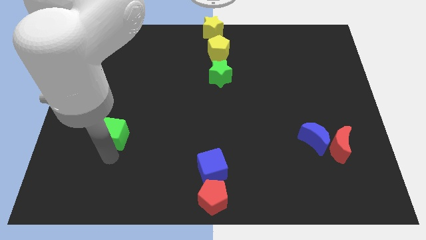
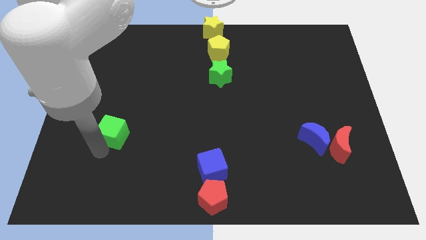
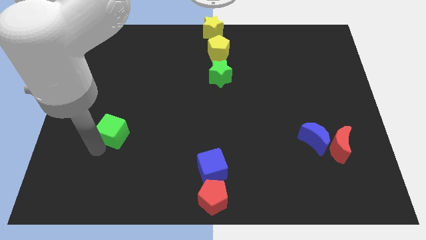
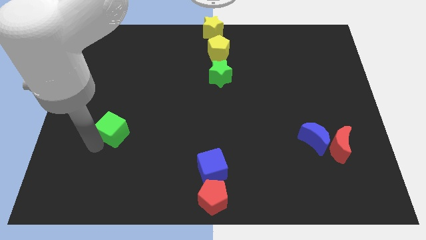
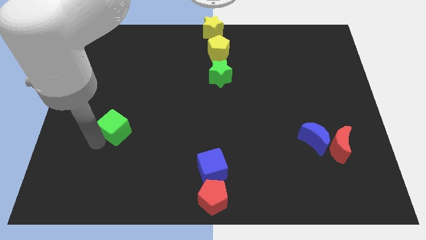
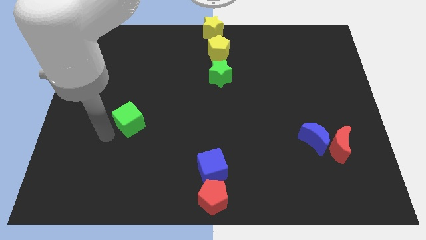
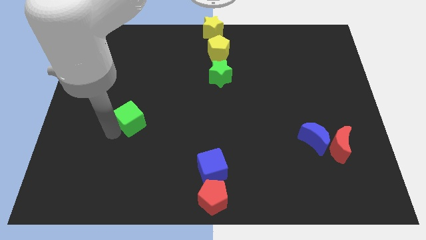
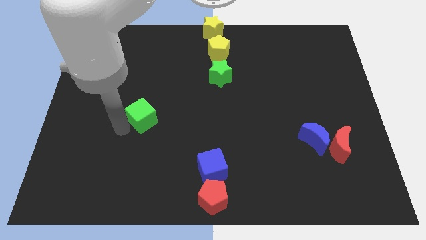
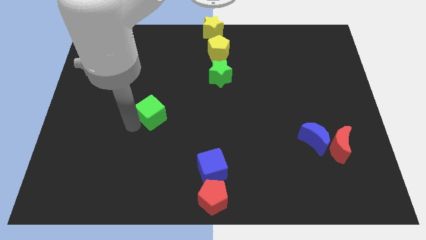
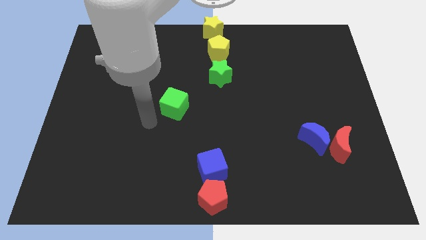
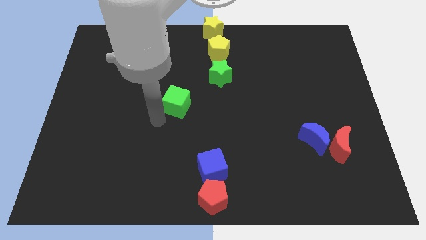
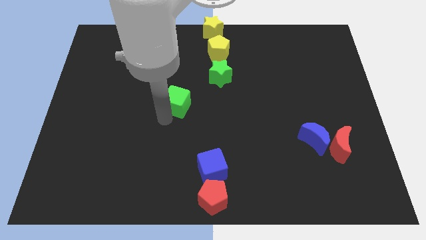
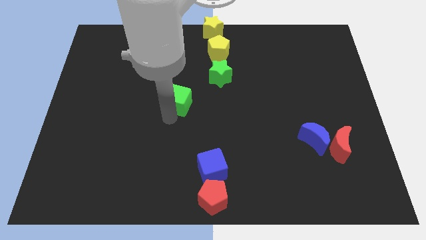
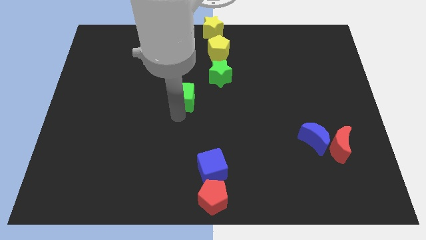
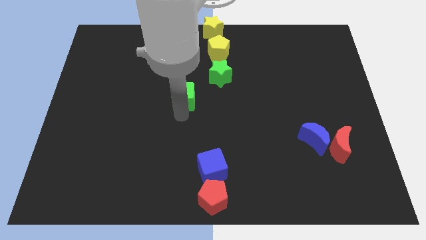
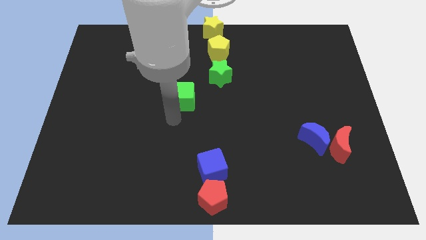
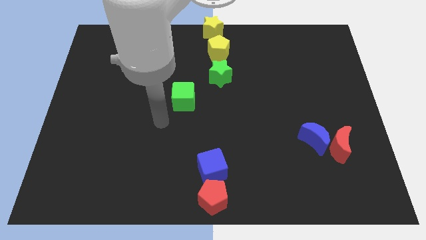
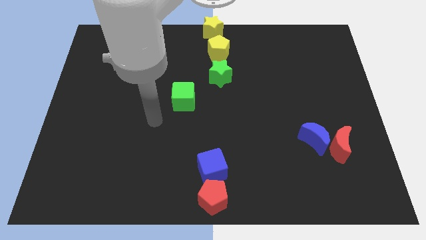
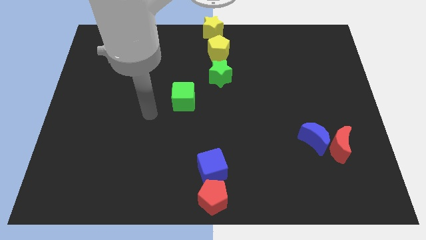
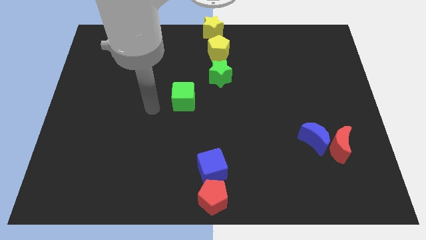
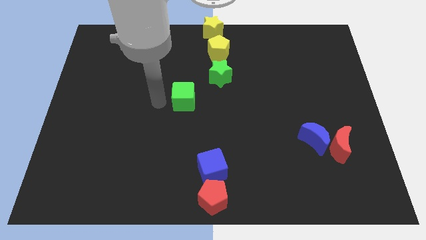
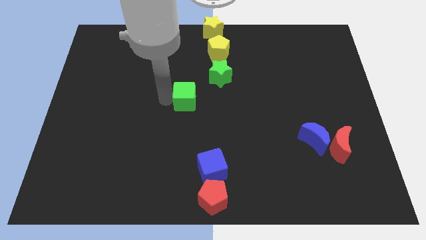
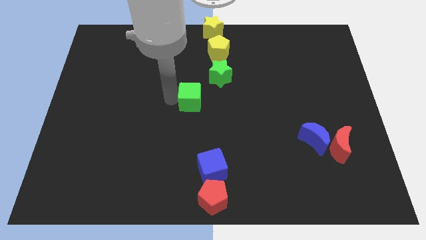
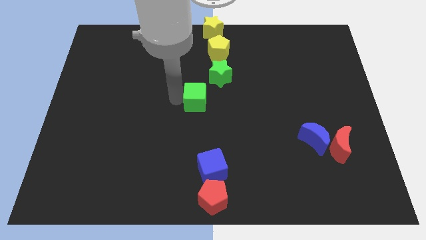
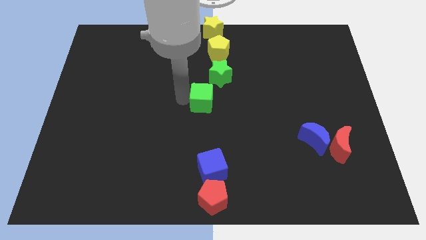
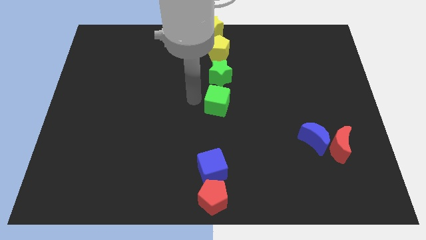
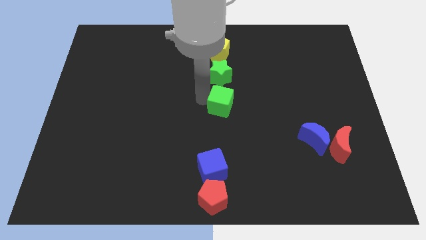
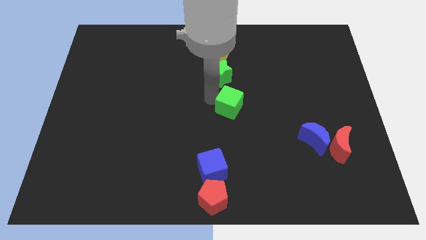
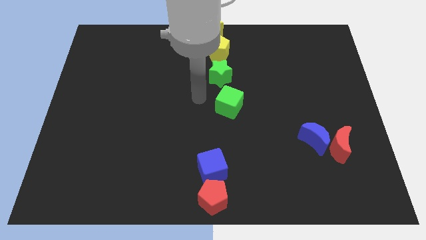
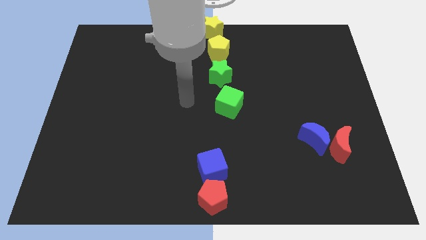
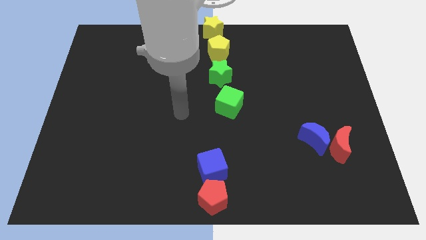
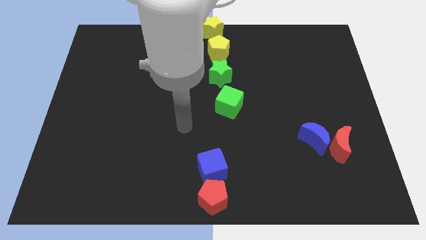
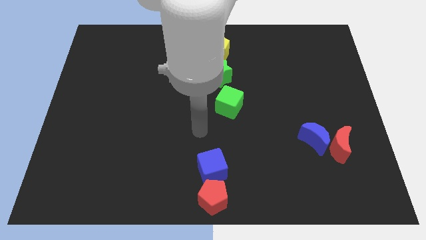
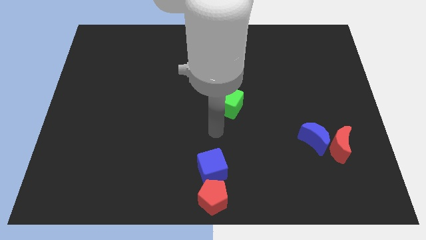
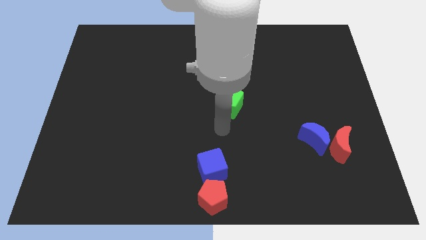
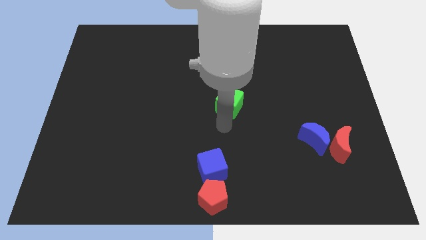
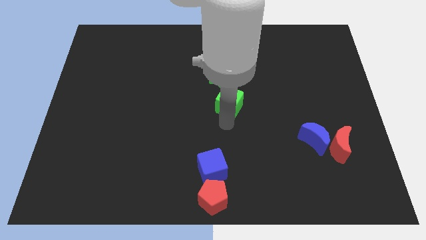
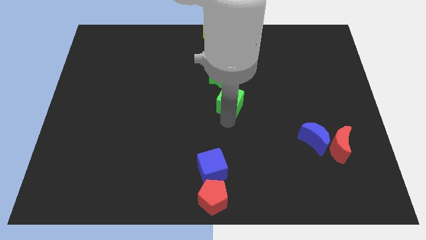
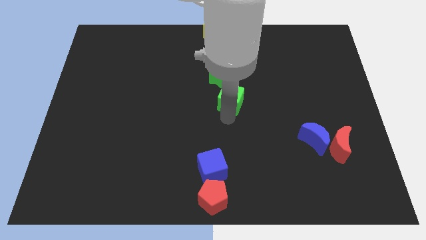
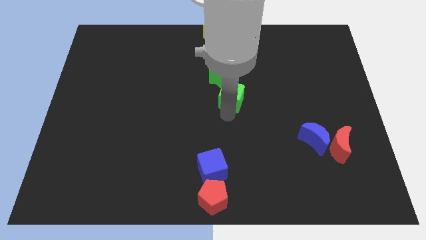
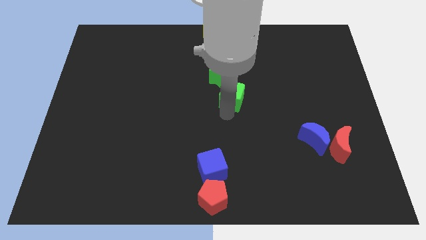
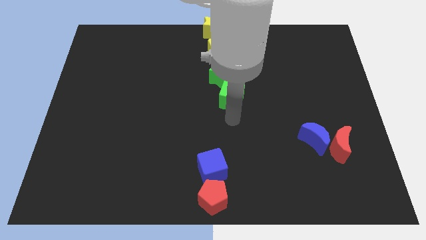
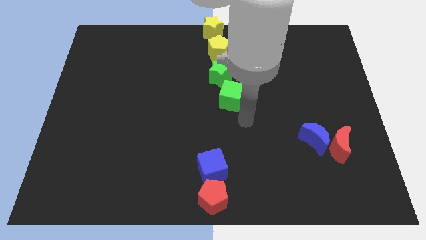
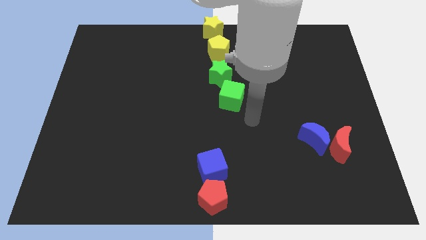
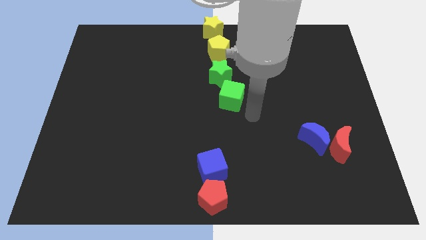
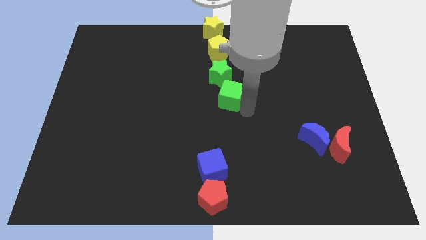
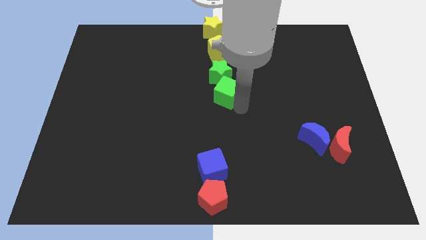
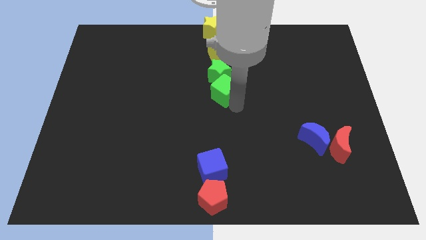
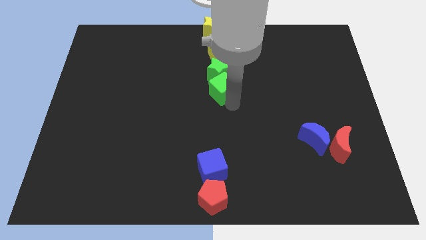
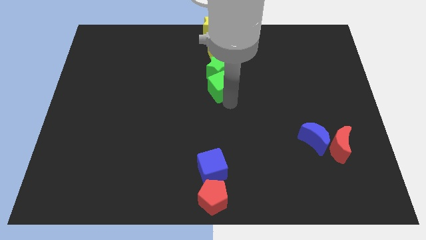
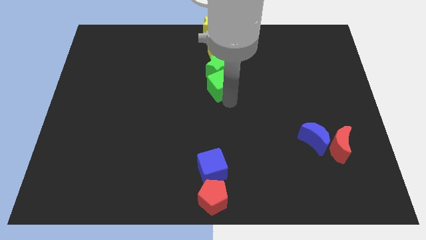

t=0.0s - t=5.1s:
push the green cube towards the bottom side of the green star

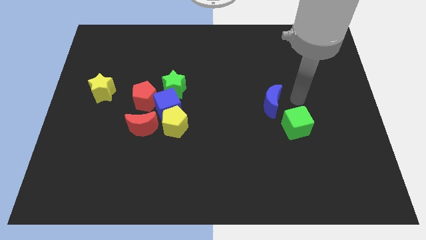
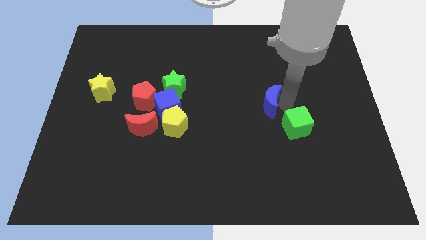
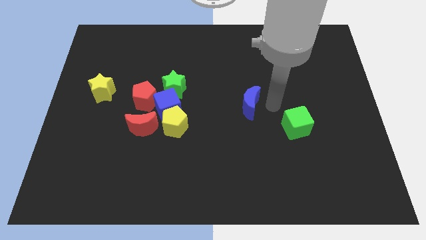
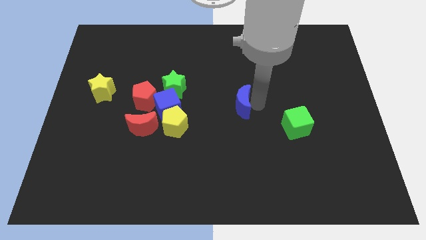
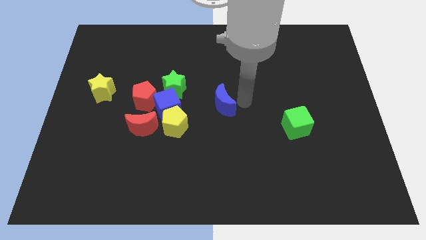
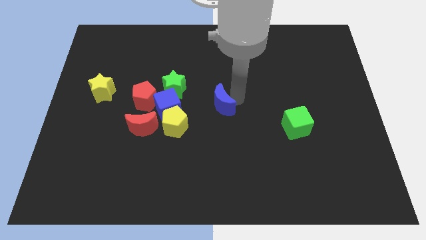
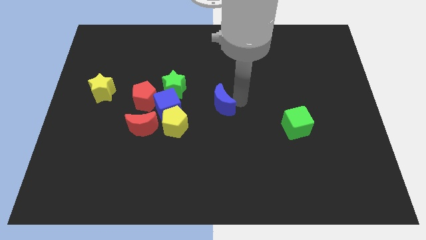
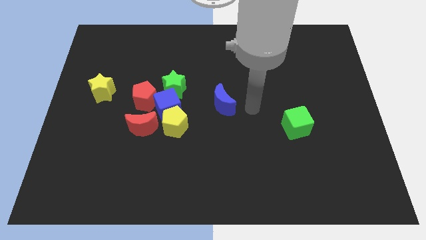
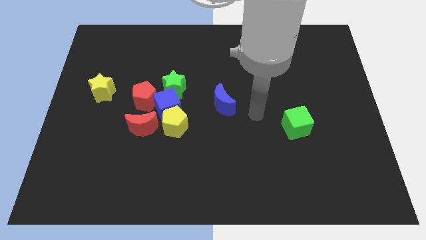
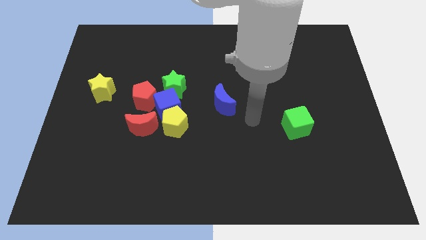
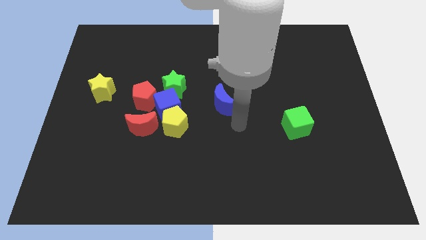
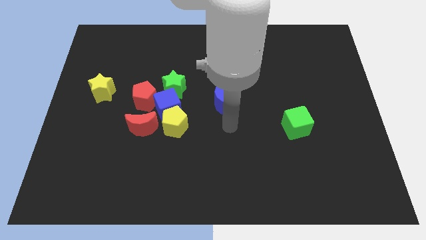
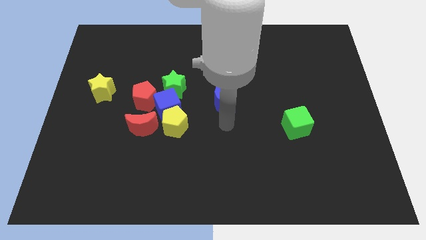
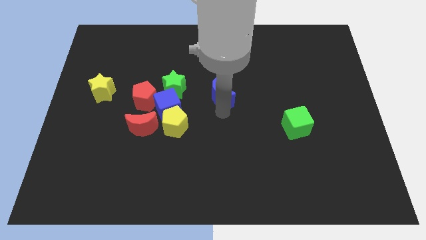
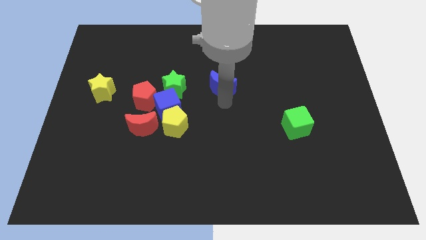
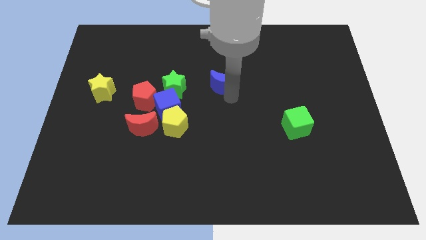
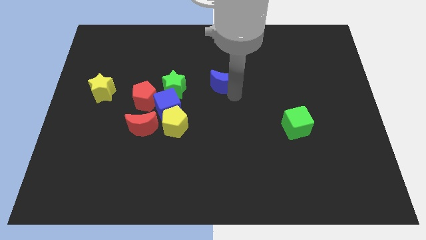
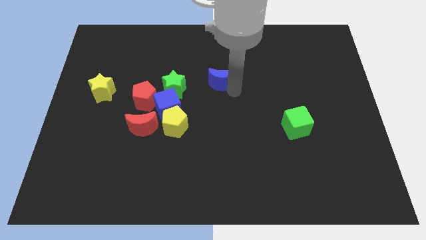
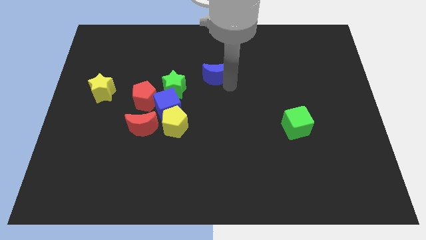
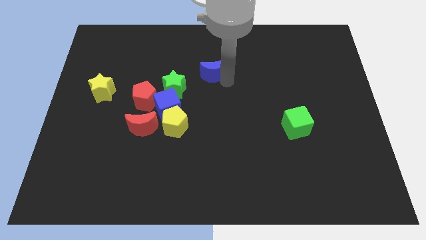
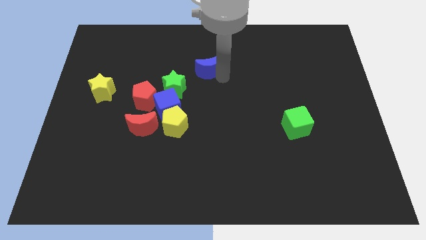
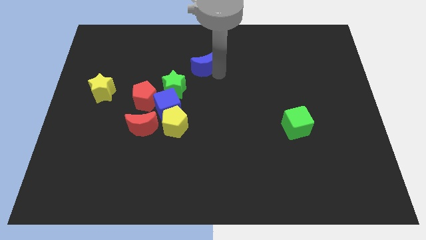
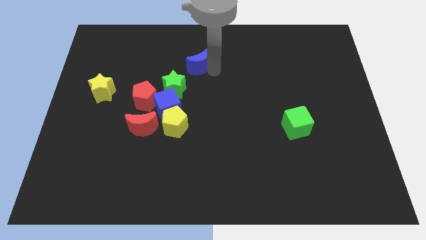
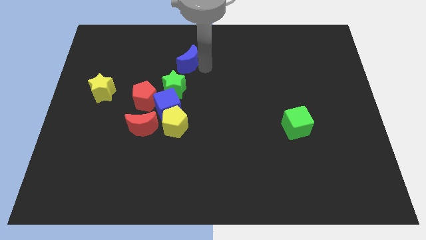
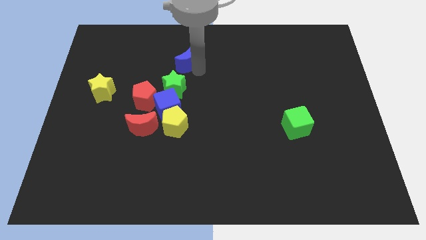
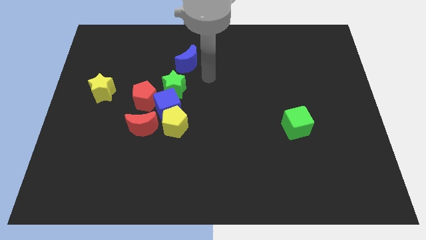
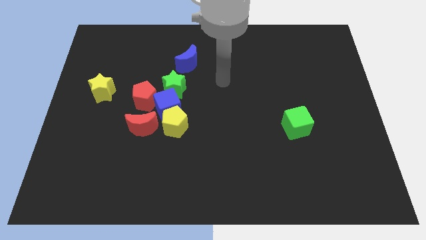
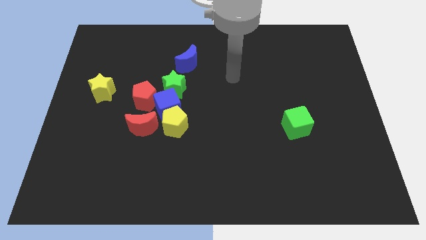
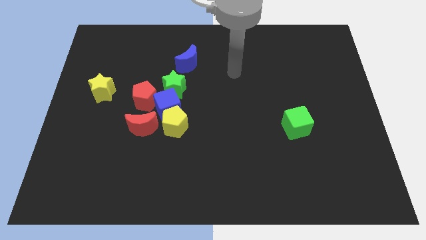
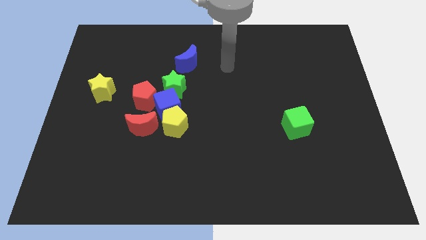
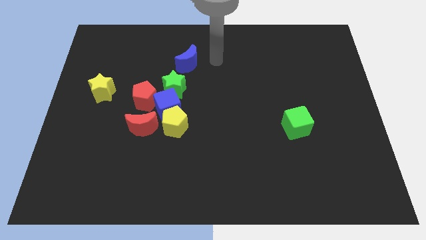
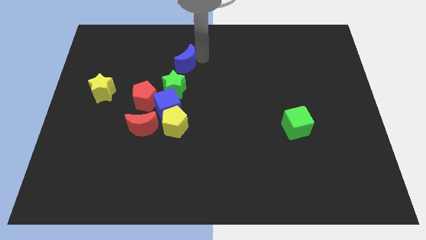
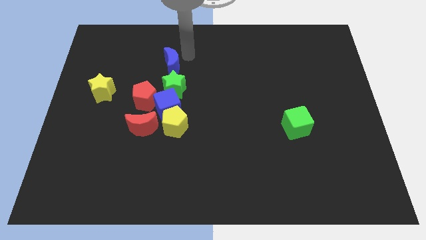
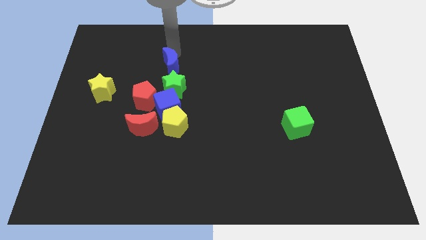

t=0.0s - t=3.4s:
place blue crescent above green star

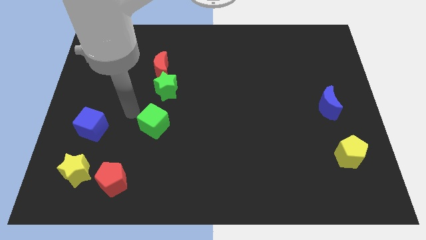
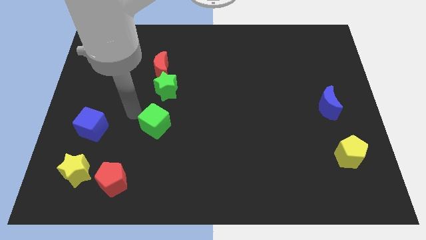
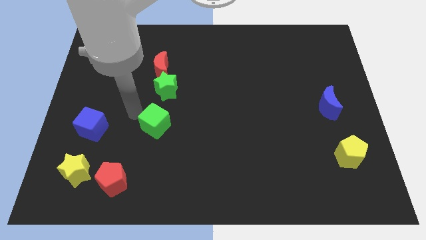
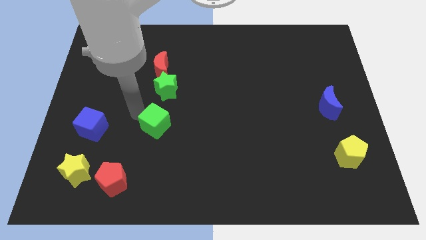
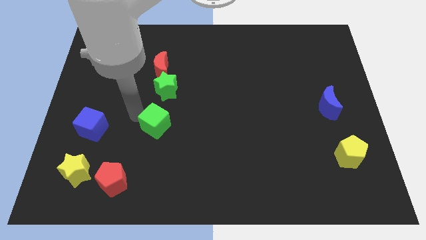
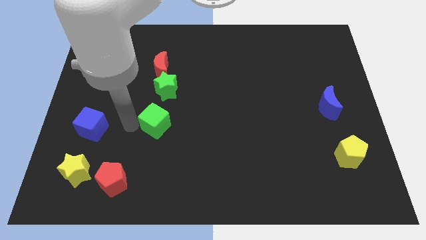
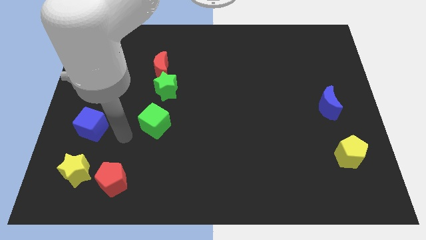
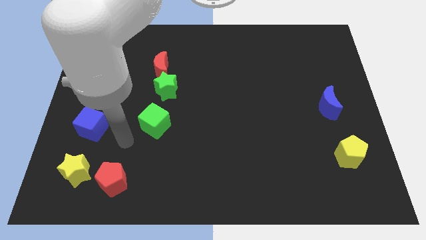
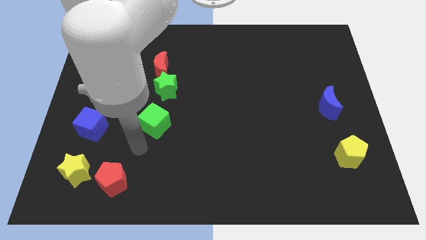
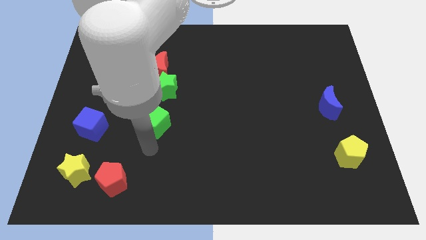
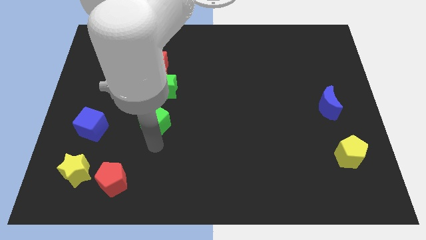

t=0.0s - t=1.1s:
move your arm to the bottom of green cube
